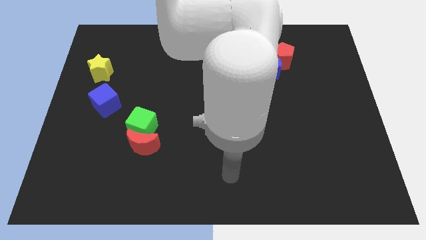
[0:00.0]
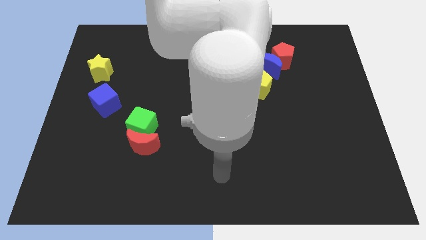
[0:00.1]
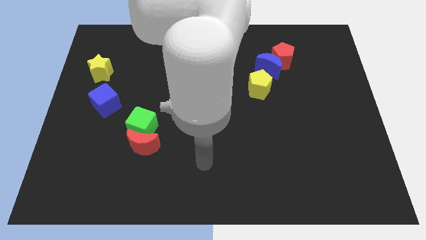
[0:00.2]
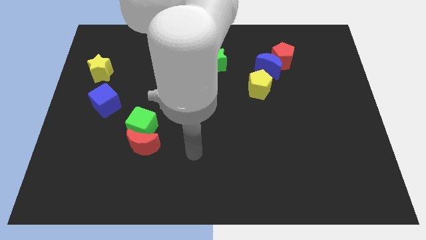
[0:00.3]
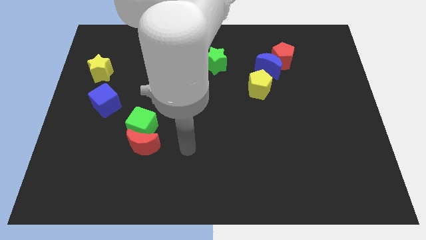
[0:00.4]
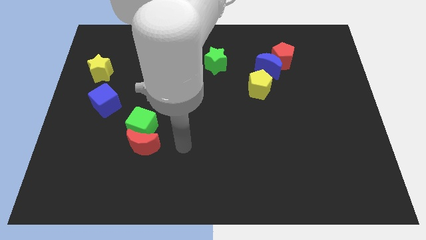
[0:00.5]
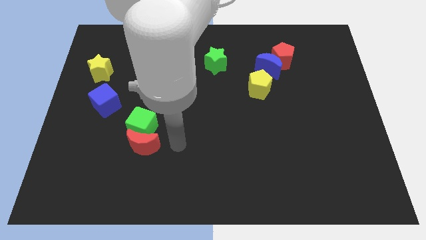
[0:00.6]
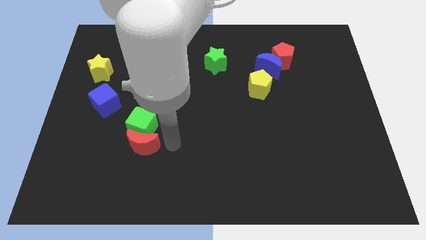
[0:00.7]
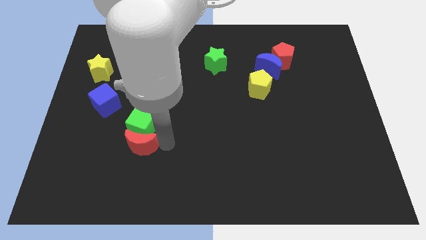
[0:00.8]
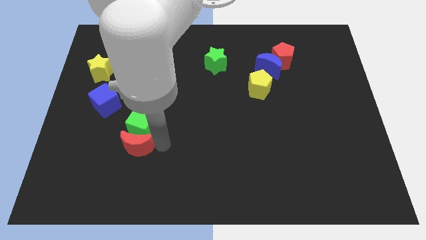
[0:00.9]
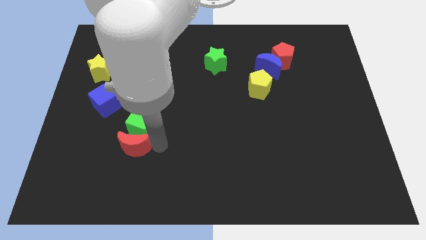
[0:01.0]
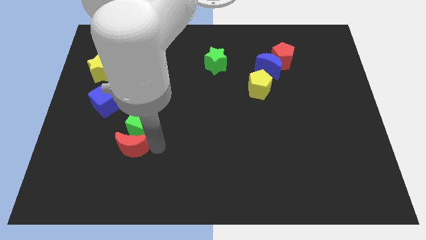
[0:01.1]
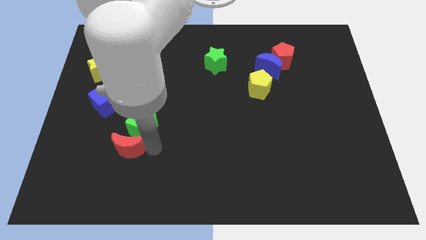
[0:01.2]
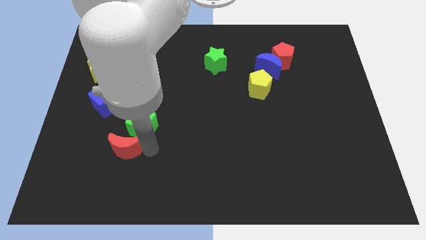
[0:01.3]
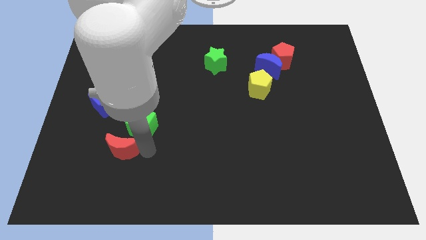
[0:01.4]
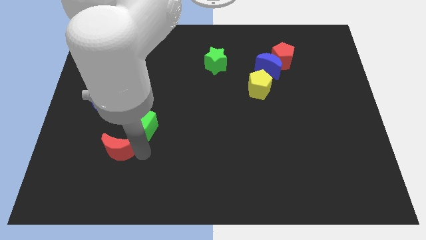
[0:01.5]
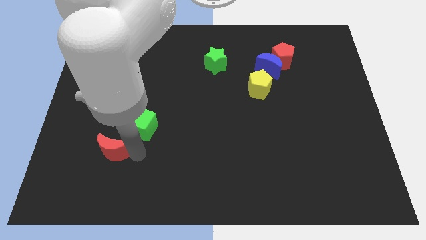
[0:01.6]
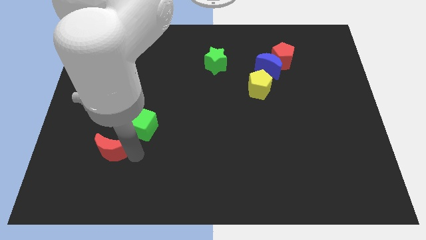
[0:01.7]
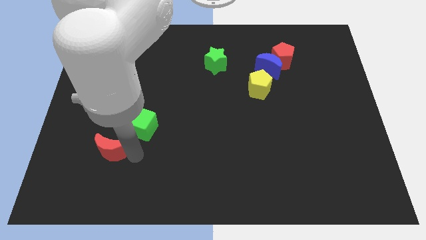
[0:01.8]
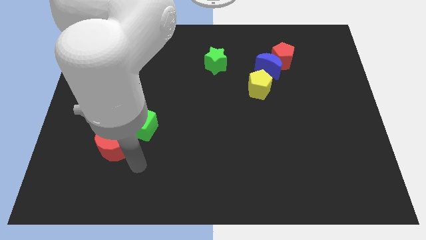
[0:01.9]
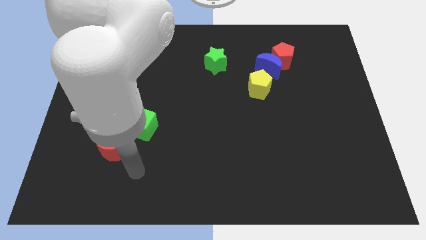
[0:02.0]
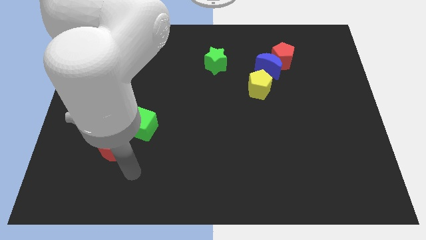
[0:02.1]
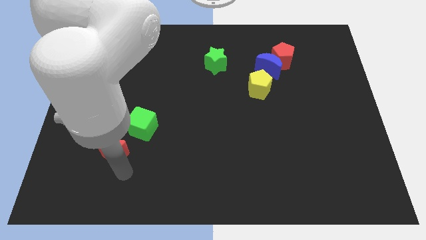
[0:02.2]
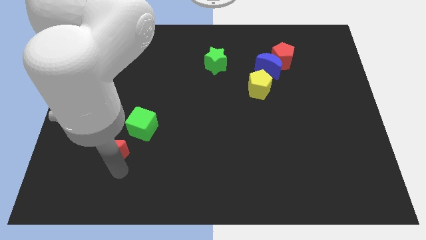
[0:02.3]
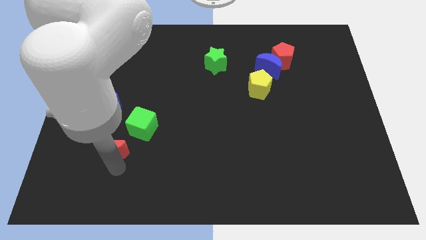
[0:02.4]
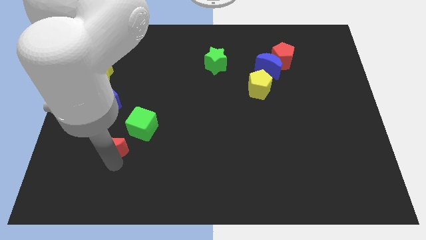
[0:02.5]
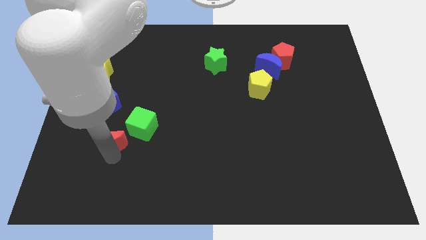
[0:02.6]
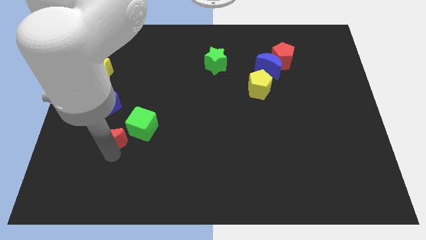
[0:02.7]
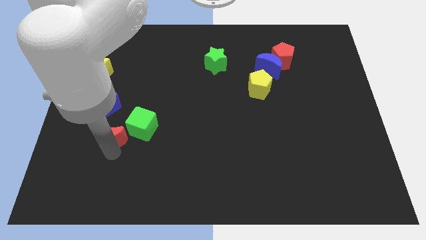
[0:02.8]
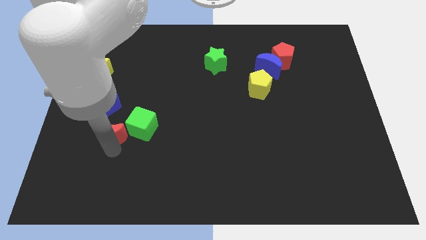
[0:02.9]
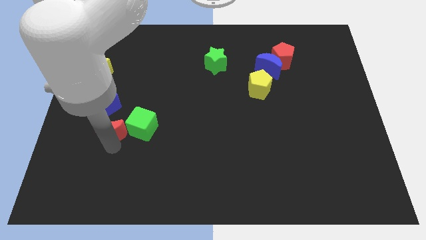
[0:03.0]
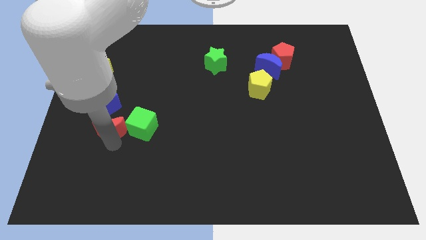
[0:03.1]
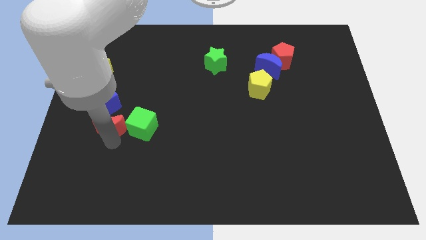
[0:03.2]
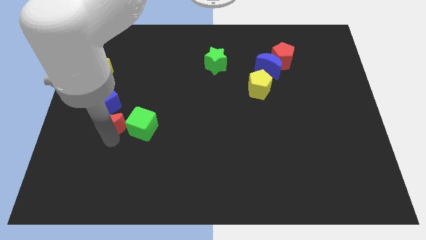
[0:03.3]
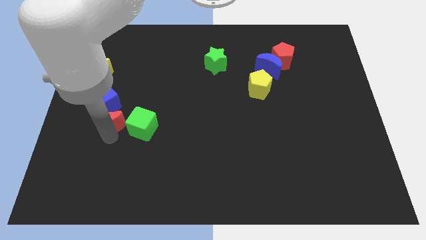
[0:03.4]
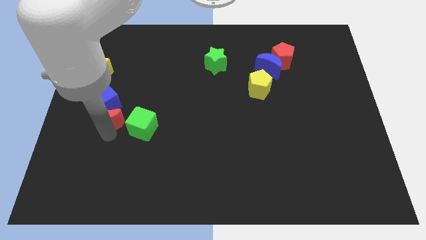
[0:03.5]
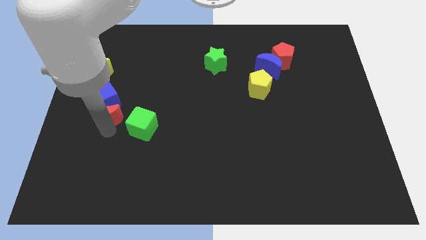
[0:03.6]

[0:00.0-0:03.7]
move the red moon towards the blue cube

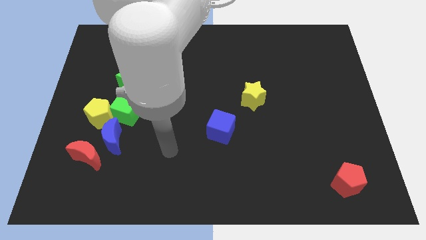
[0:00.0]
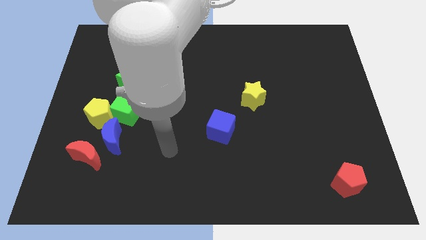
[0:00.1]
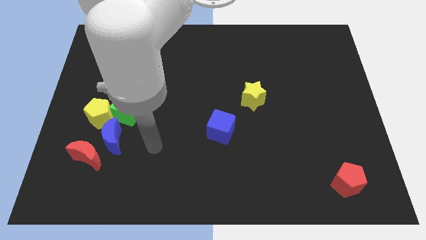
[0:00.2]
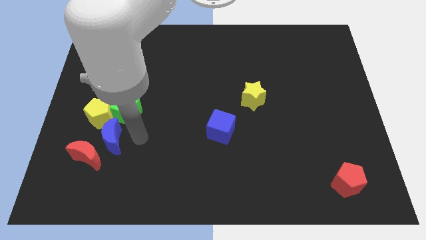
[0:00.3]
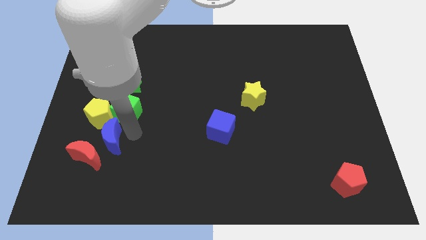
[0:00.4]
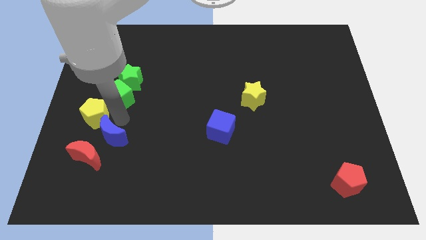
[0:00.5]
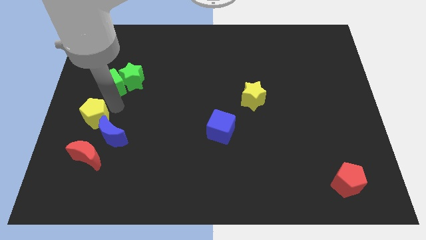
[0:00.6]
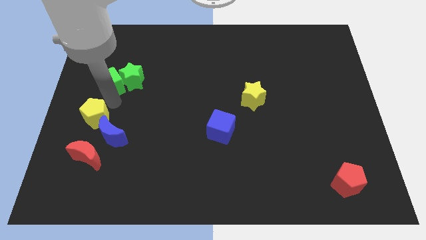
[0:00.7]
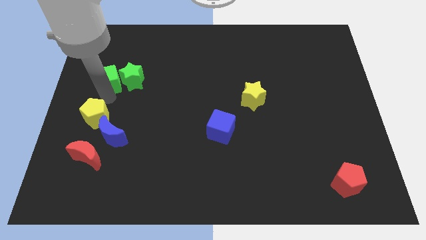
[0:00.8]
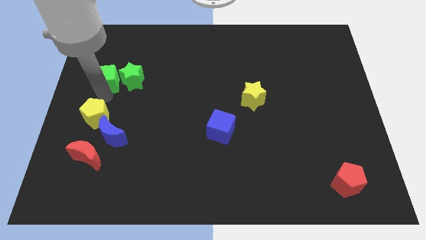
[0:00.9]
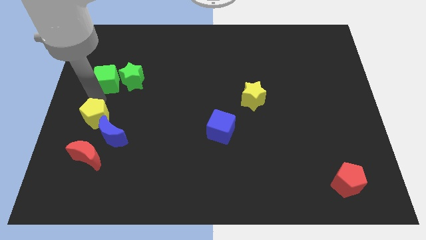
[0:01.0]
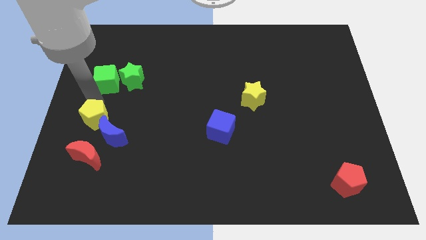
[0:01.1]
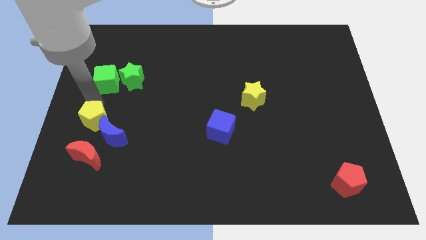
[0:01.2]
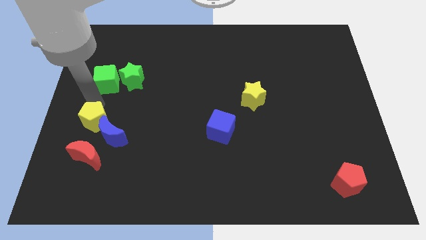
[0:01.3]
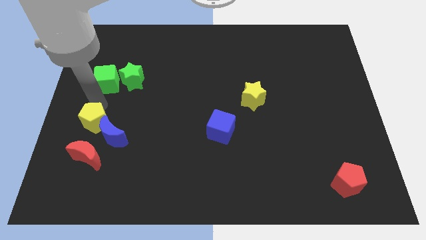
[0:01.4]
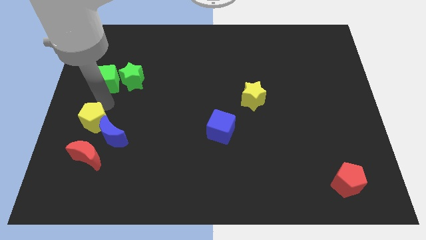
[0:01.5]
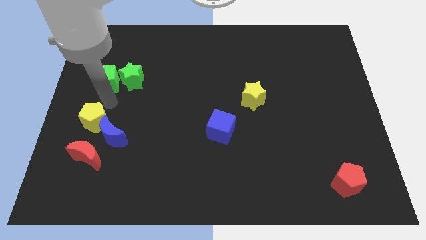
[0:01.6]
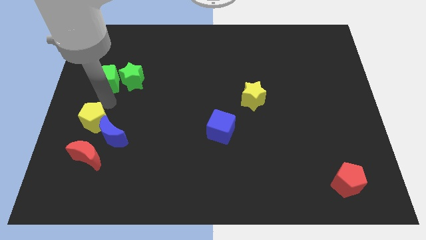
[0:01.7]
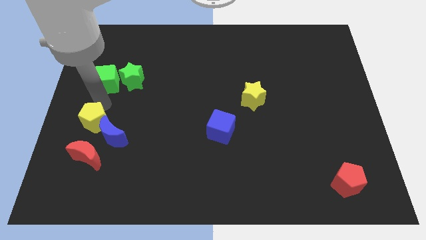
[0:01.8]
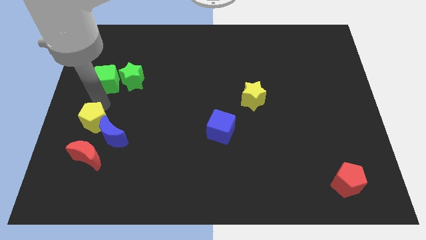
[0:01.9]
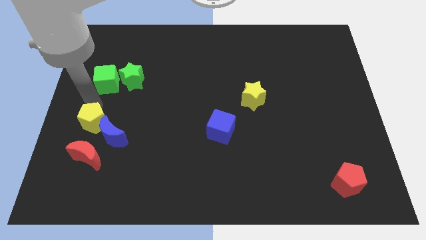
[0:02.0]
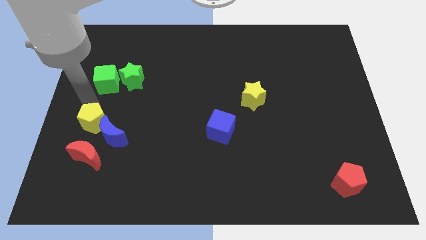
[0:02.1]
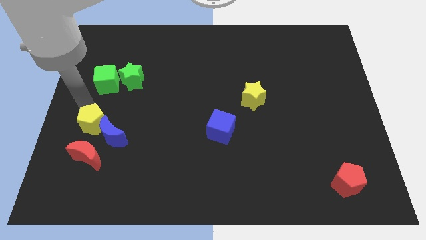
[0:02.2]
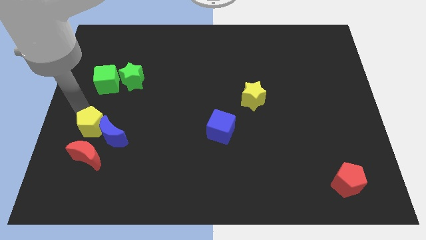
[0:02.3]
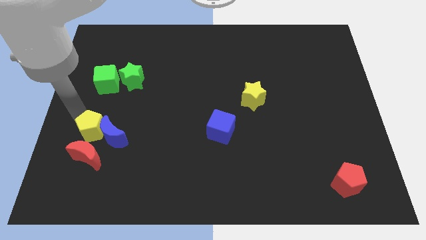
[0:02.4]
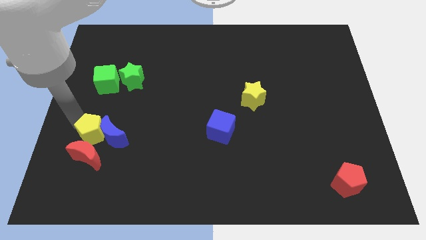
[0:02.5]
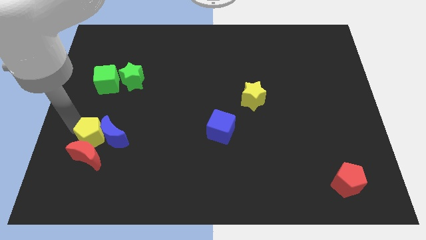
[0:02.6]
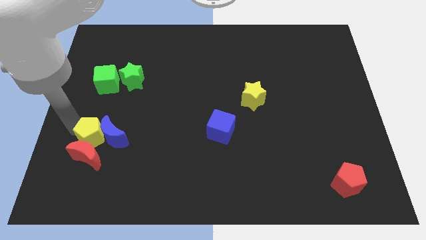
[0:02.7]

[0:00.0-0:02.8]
push the yellow pentagon next to the red moon

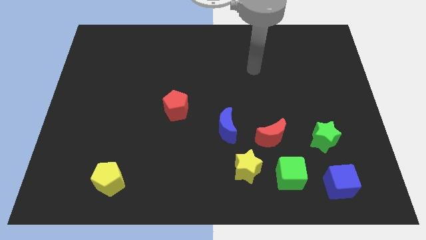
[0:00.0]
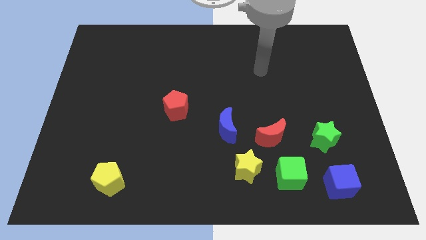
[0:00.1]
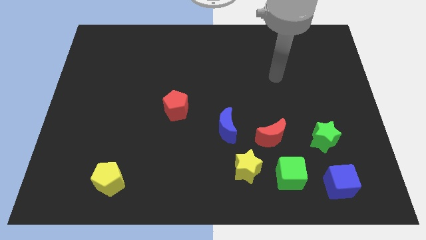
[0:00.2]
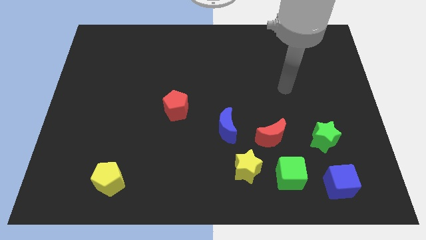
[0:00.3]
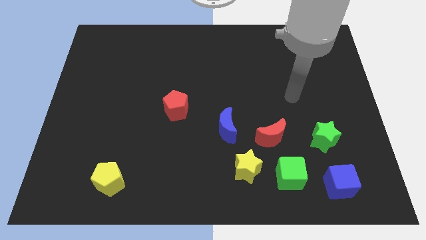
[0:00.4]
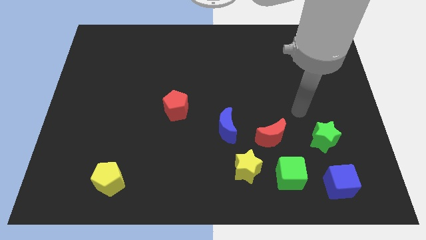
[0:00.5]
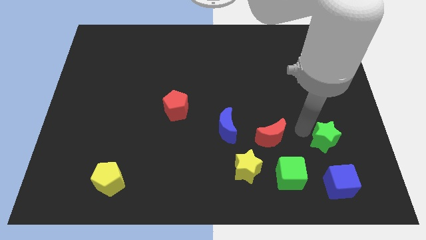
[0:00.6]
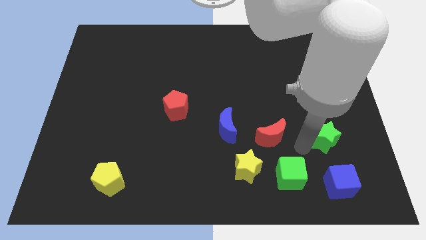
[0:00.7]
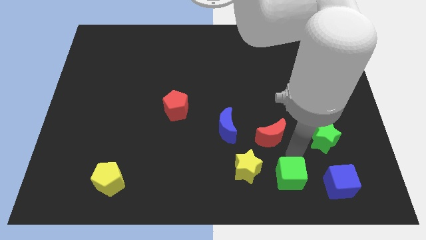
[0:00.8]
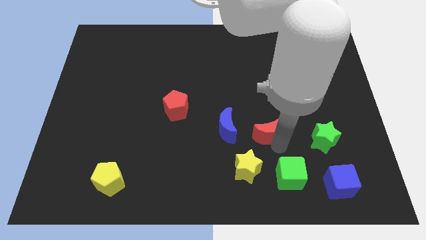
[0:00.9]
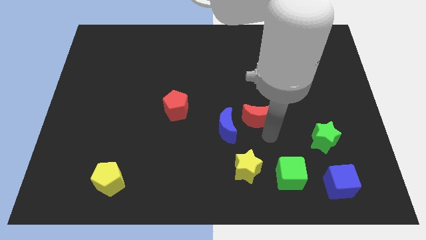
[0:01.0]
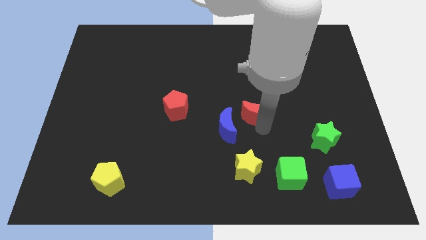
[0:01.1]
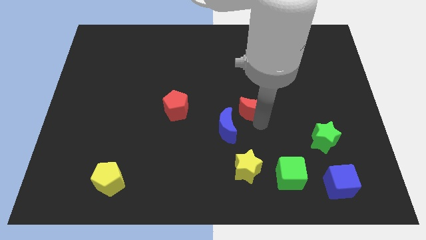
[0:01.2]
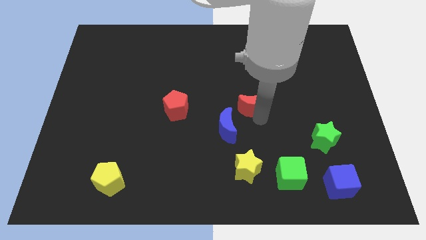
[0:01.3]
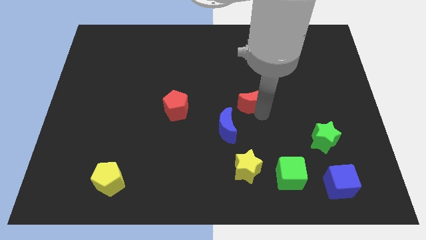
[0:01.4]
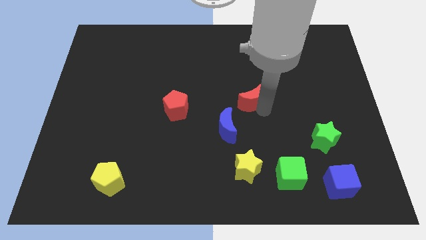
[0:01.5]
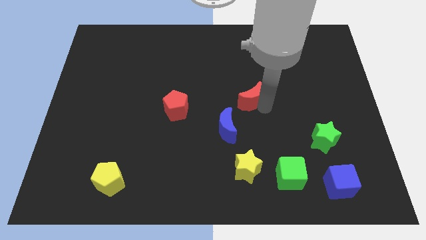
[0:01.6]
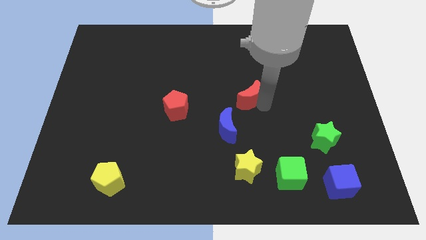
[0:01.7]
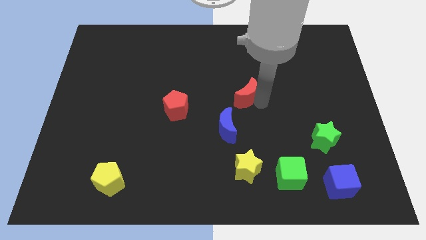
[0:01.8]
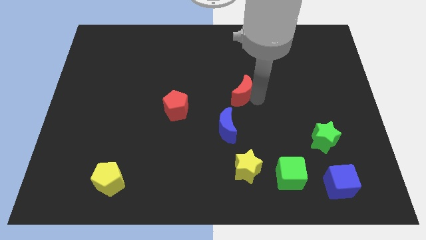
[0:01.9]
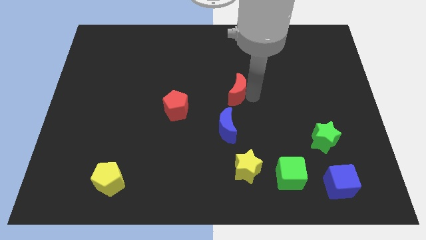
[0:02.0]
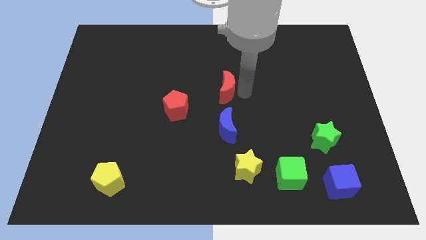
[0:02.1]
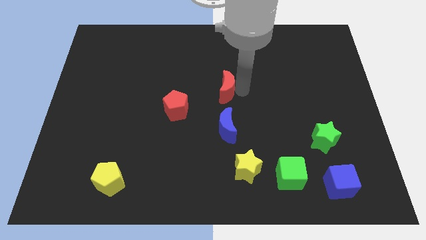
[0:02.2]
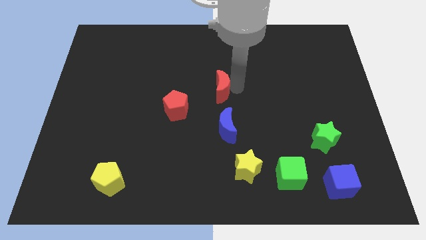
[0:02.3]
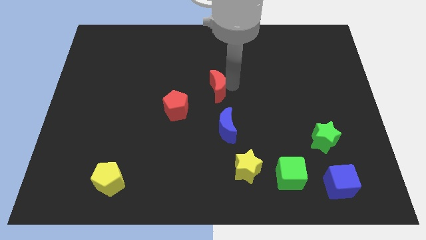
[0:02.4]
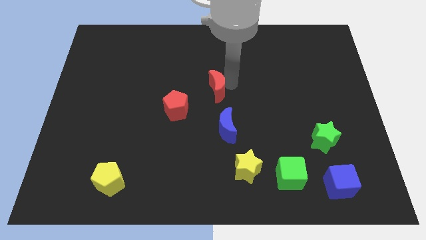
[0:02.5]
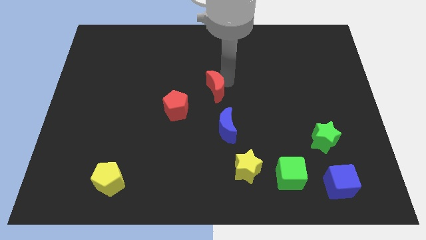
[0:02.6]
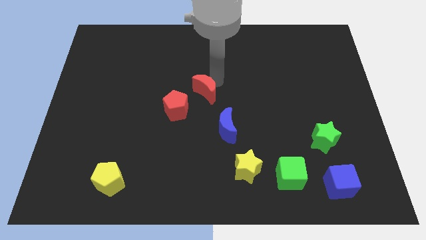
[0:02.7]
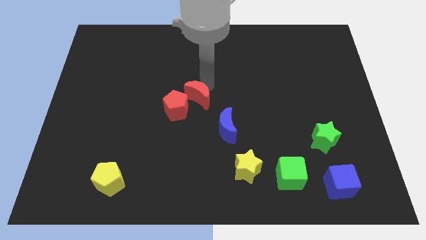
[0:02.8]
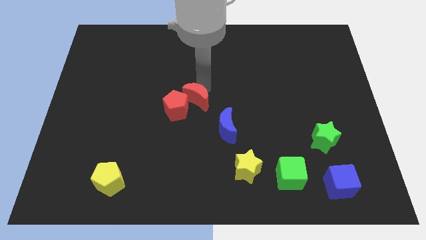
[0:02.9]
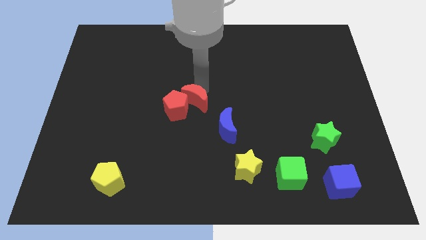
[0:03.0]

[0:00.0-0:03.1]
put the red moon towards the red pentagon
